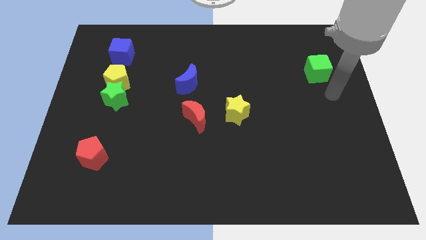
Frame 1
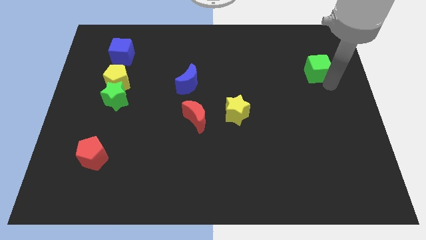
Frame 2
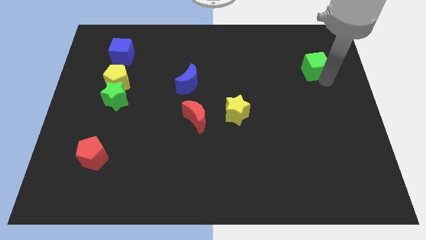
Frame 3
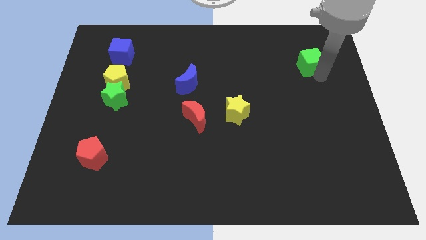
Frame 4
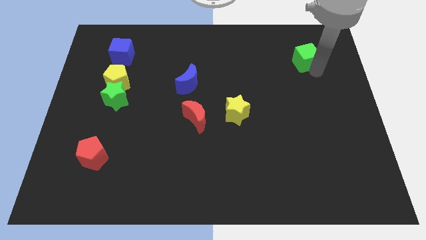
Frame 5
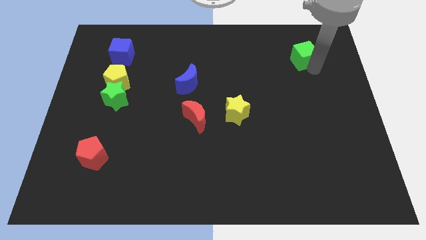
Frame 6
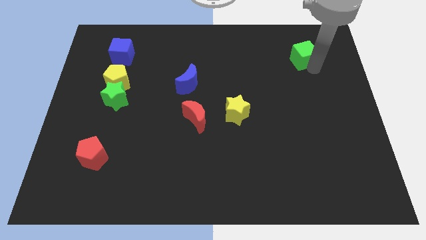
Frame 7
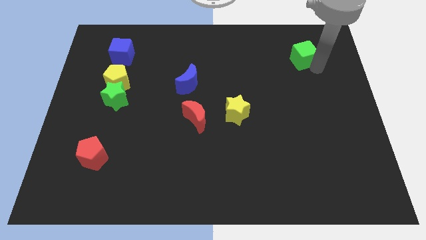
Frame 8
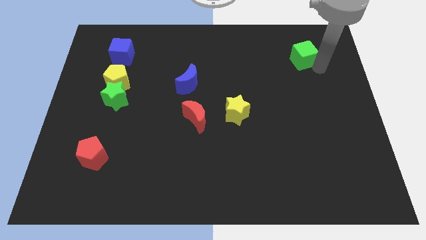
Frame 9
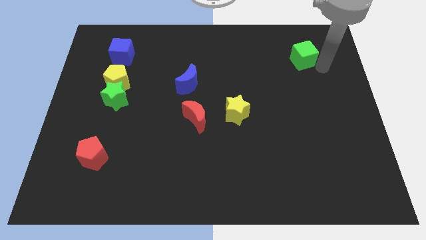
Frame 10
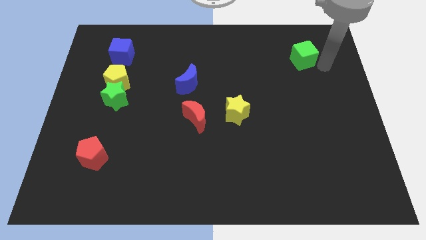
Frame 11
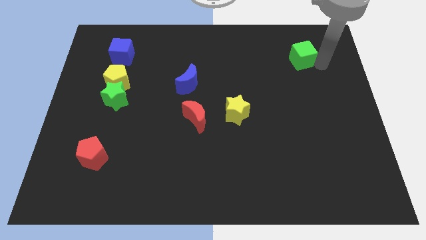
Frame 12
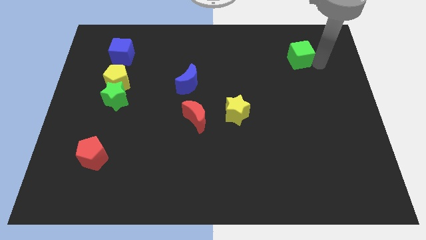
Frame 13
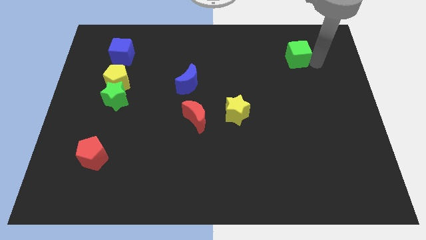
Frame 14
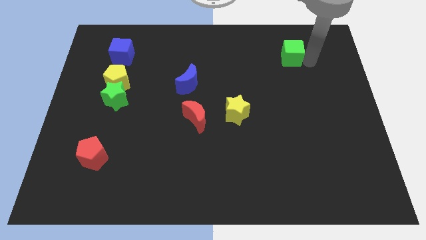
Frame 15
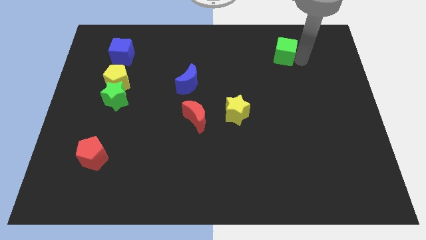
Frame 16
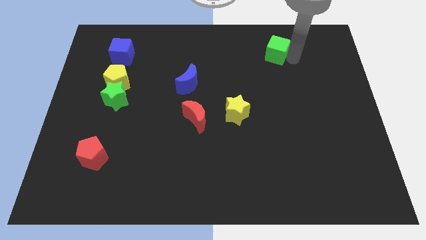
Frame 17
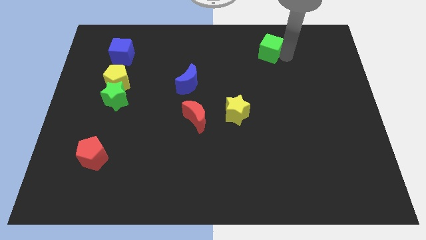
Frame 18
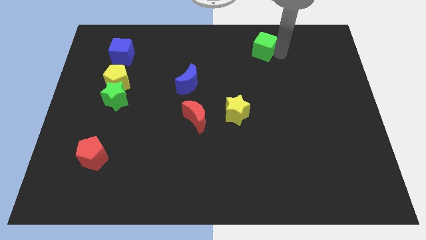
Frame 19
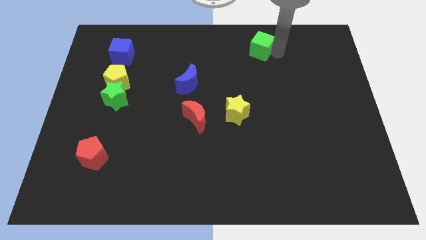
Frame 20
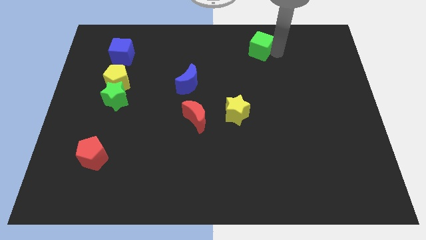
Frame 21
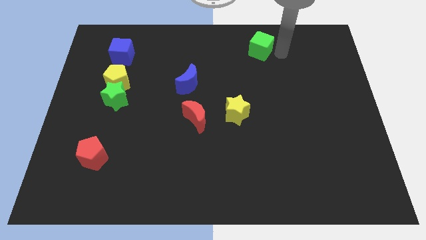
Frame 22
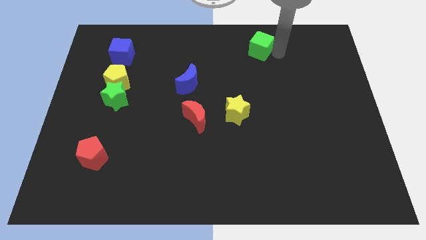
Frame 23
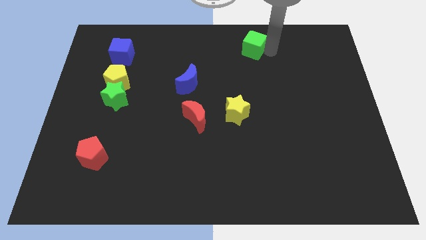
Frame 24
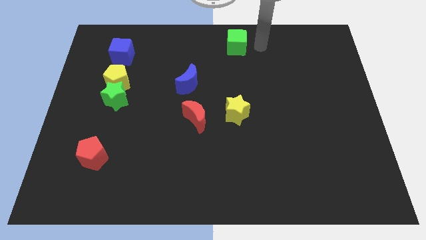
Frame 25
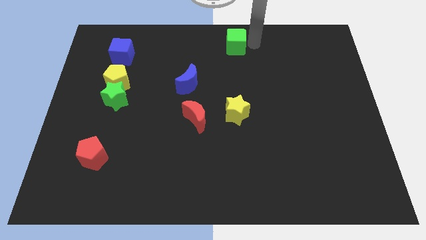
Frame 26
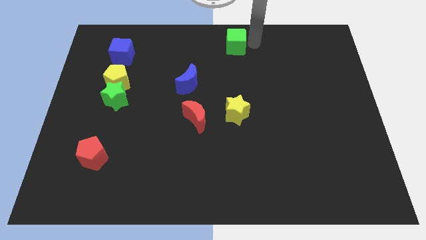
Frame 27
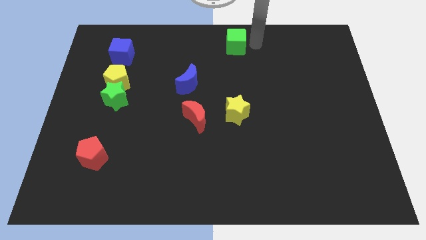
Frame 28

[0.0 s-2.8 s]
move the green cube towards the top center of the board

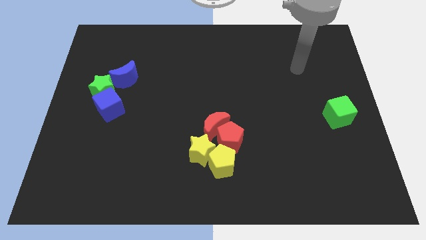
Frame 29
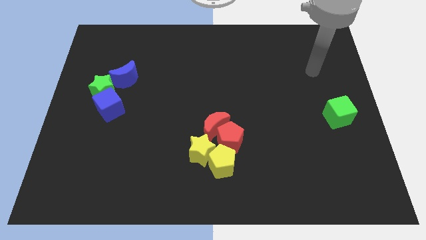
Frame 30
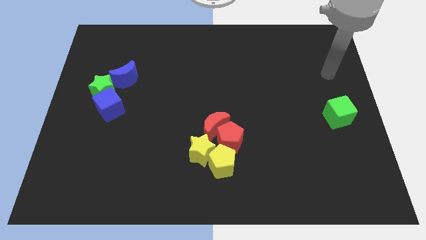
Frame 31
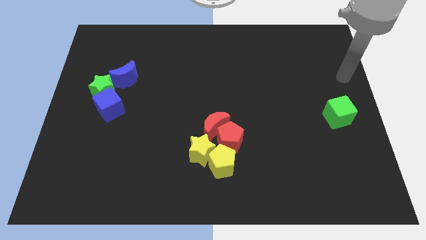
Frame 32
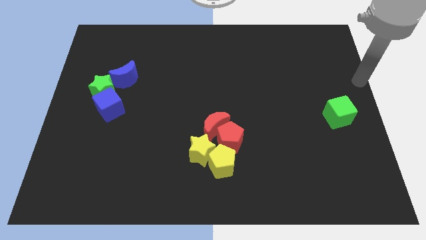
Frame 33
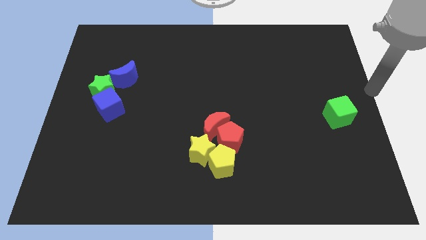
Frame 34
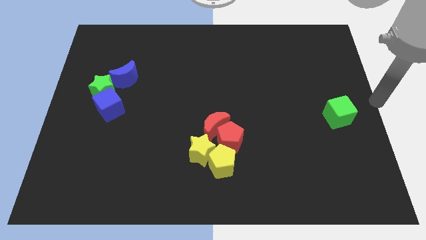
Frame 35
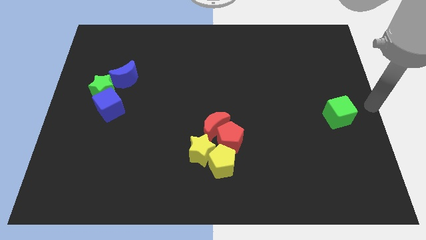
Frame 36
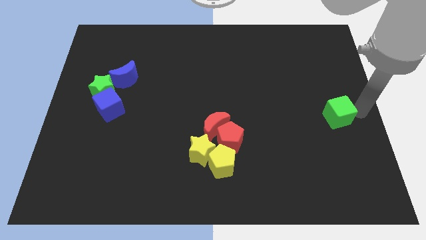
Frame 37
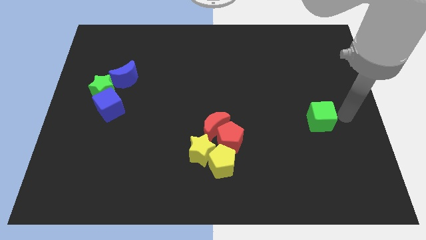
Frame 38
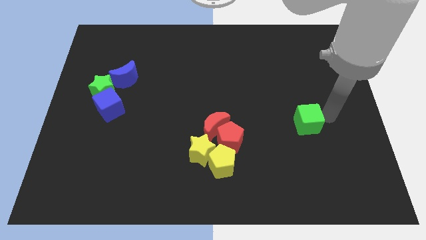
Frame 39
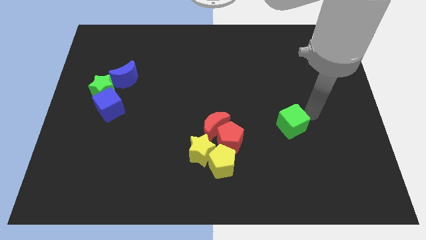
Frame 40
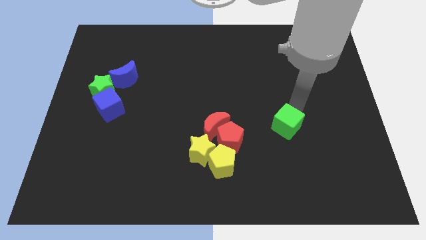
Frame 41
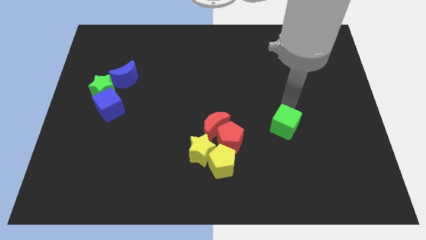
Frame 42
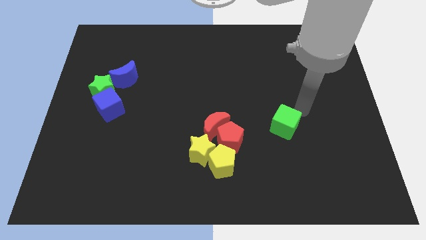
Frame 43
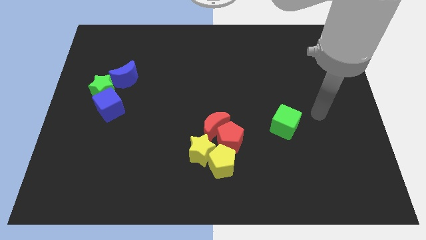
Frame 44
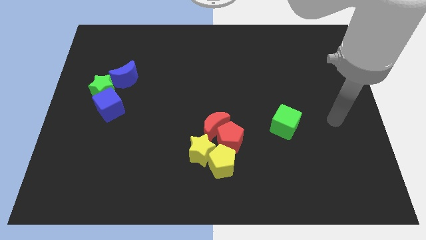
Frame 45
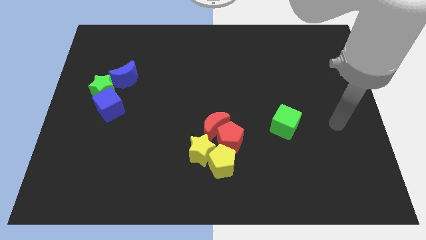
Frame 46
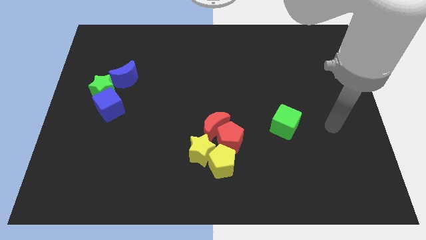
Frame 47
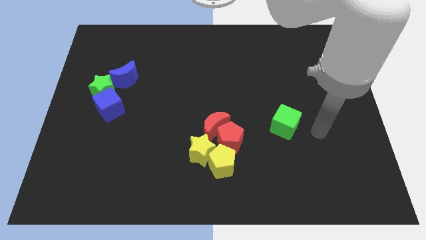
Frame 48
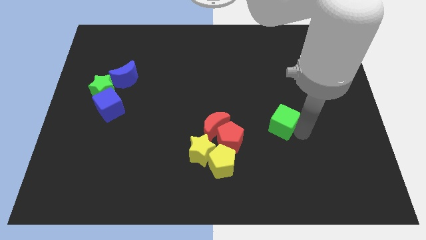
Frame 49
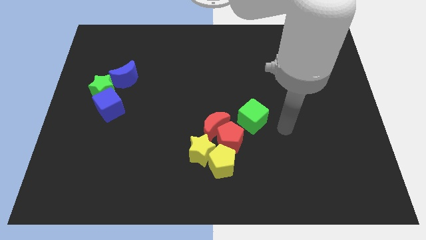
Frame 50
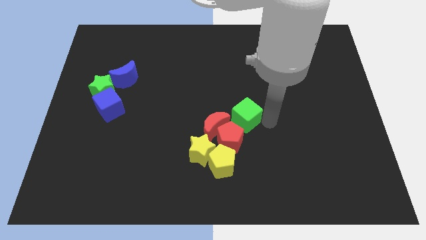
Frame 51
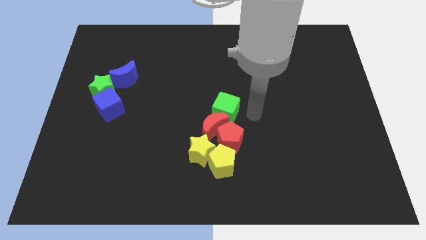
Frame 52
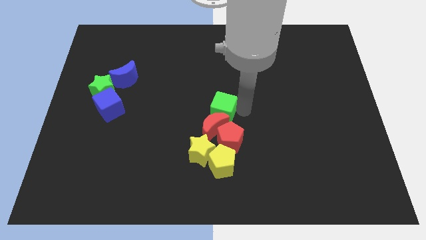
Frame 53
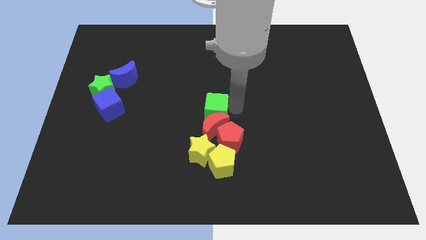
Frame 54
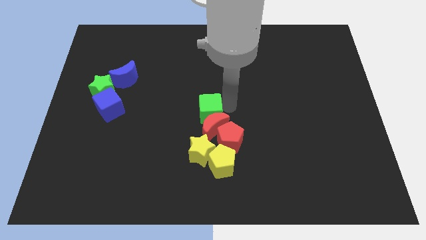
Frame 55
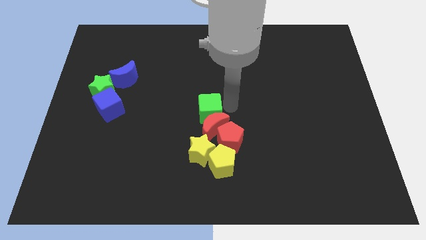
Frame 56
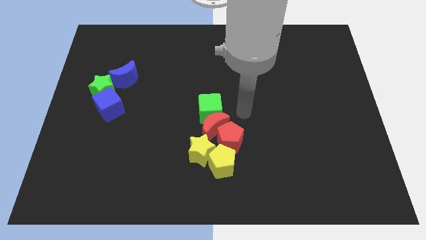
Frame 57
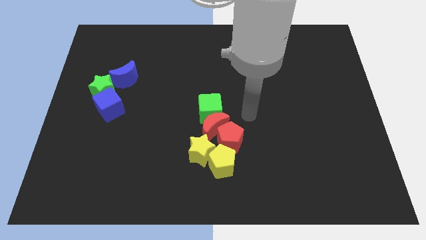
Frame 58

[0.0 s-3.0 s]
place the green cube above the red moon

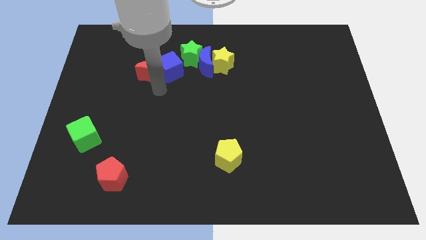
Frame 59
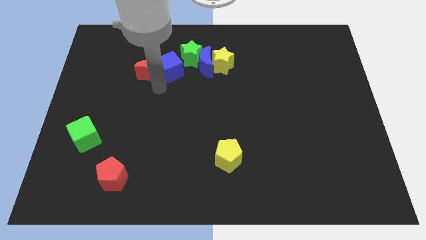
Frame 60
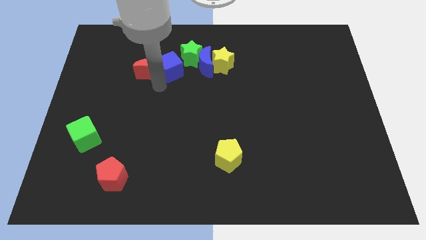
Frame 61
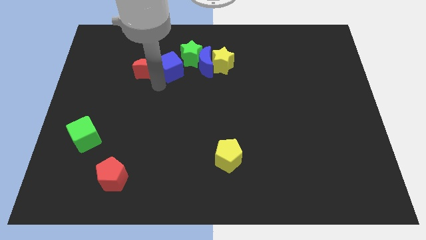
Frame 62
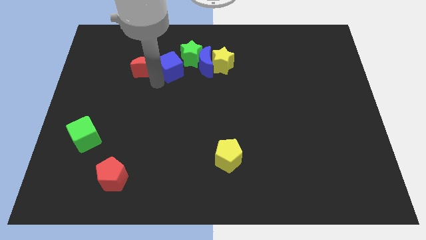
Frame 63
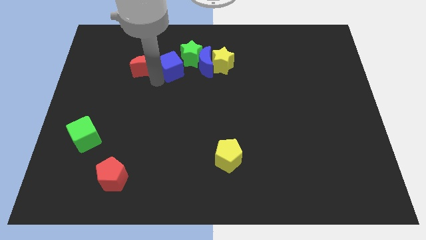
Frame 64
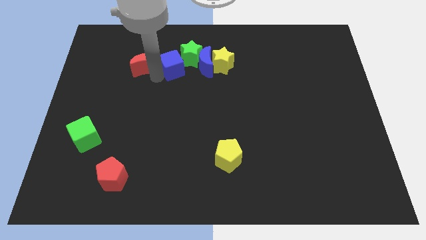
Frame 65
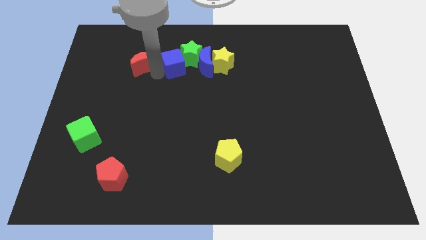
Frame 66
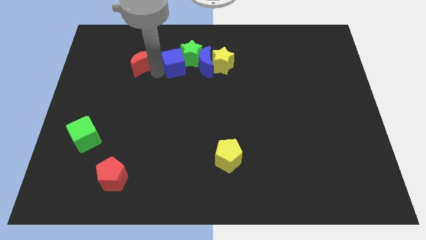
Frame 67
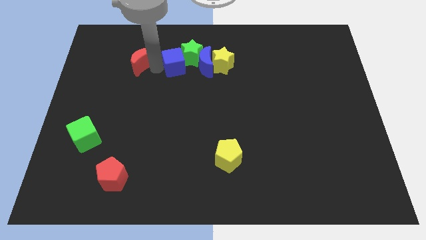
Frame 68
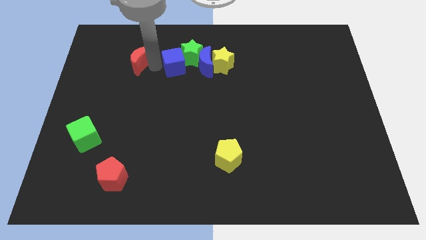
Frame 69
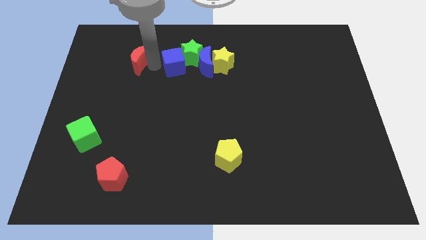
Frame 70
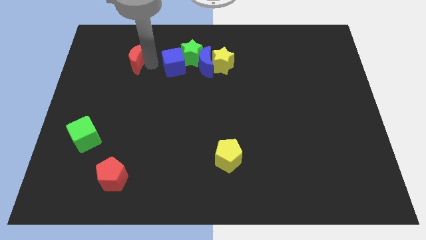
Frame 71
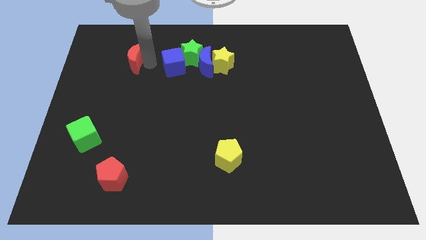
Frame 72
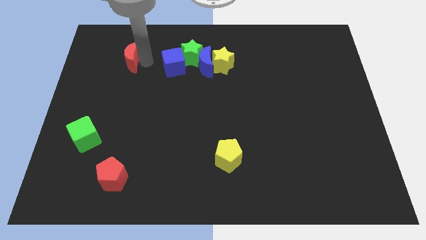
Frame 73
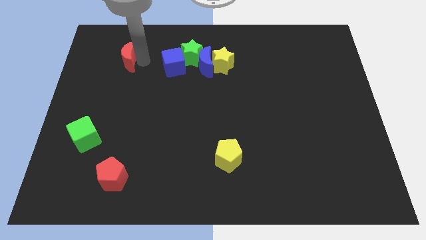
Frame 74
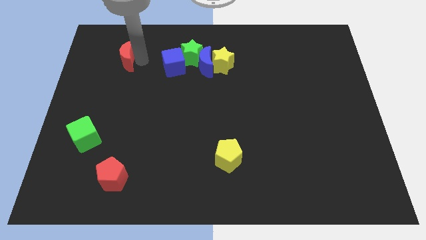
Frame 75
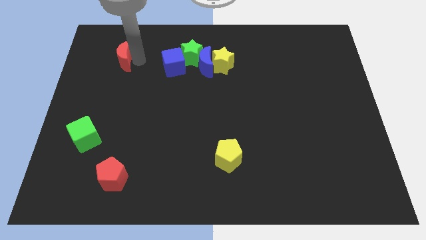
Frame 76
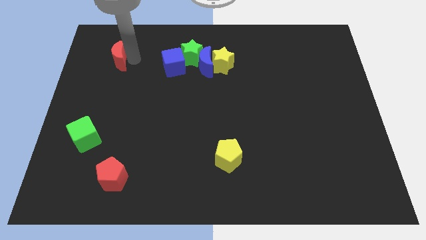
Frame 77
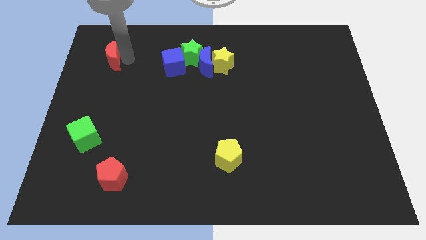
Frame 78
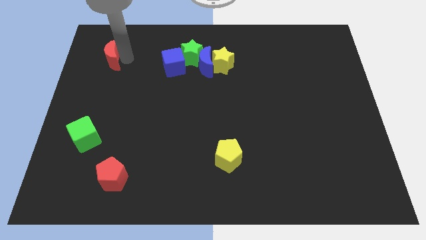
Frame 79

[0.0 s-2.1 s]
move the red crescent away from the blue cube

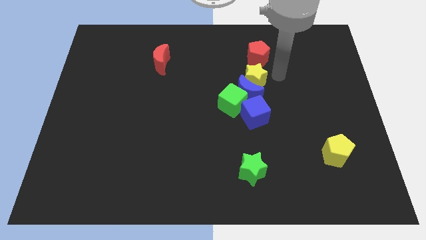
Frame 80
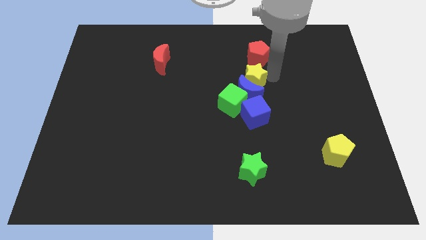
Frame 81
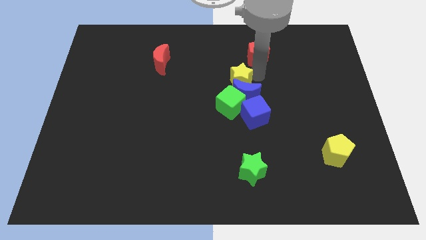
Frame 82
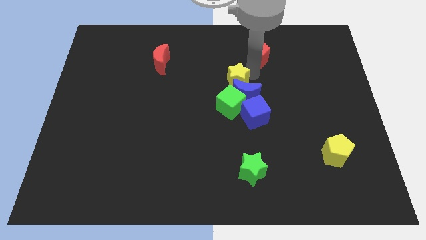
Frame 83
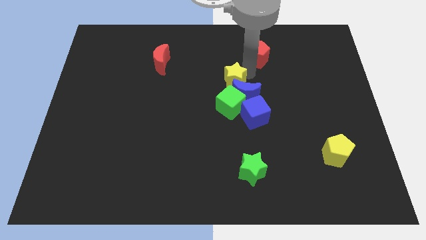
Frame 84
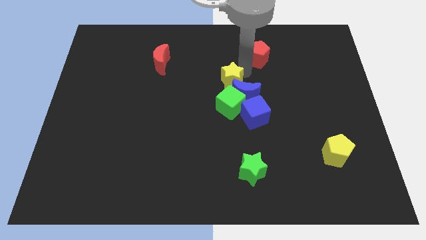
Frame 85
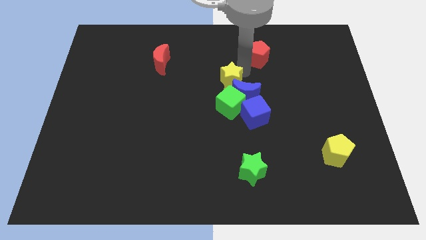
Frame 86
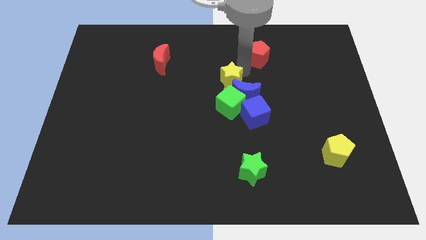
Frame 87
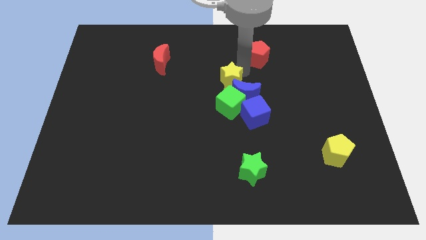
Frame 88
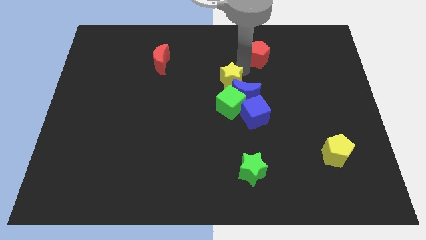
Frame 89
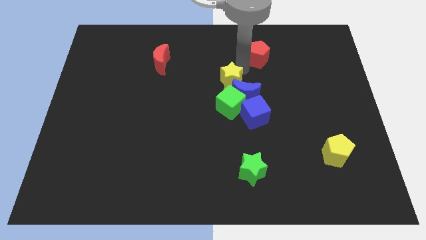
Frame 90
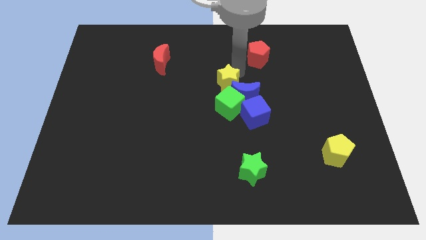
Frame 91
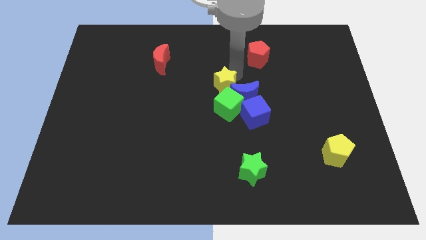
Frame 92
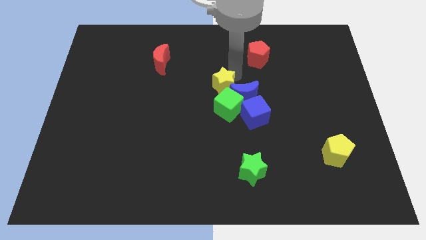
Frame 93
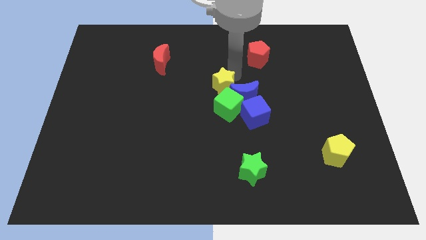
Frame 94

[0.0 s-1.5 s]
move the yellow star diagonally bottom left to the red pentagon
